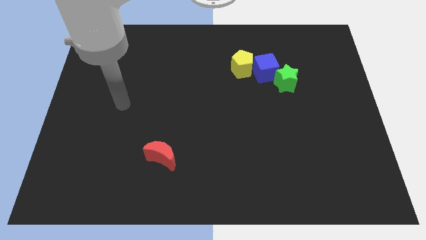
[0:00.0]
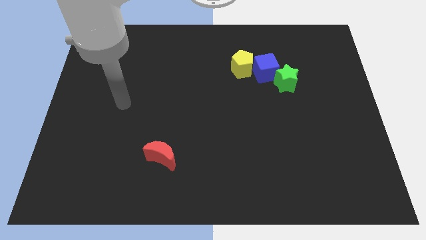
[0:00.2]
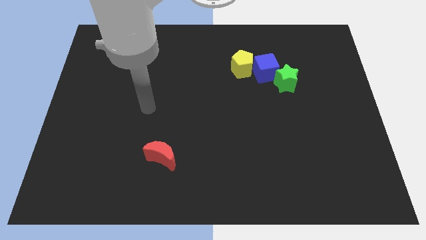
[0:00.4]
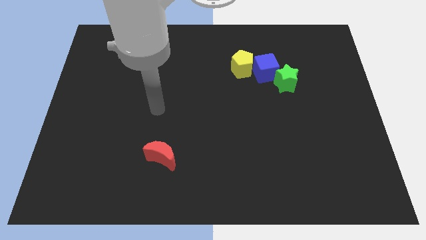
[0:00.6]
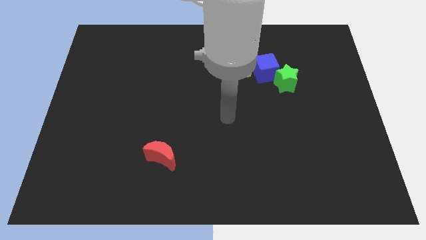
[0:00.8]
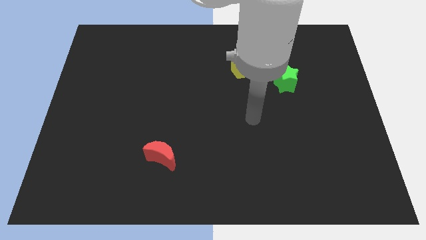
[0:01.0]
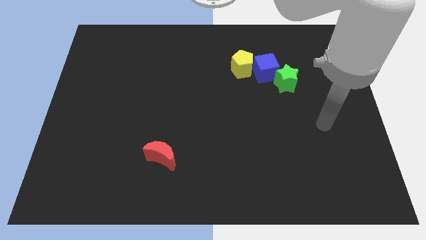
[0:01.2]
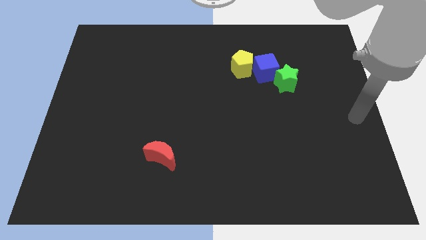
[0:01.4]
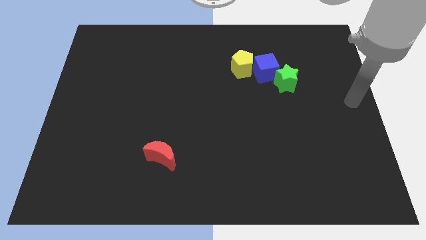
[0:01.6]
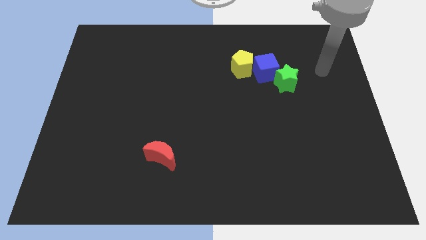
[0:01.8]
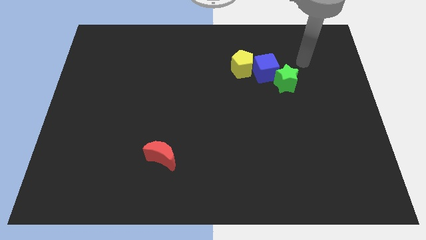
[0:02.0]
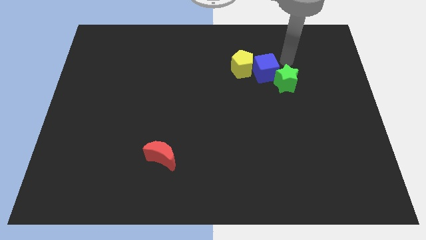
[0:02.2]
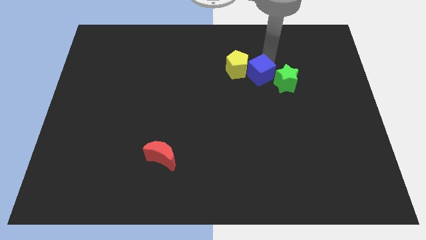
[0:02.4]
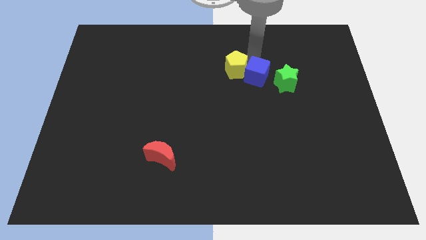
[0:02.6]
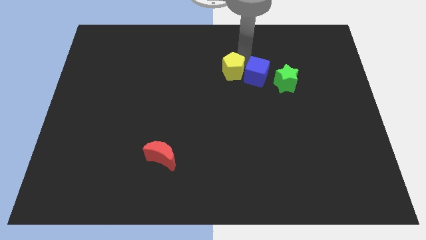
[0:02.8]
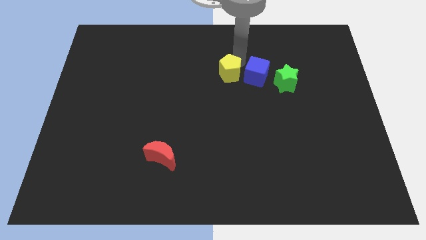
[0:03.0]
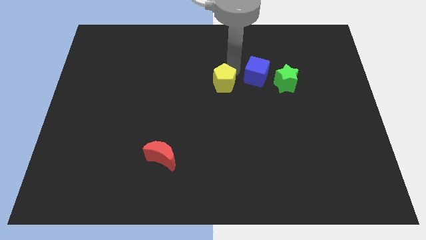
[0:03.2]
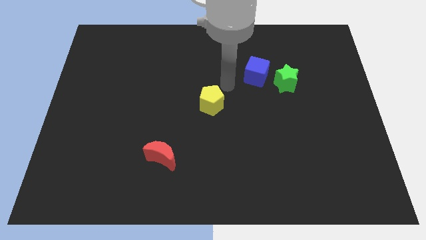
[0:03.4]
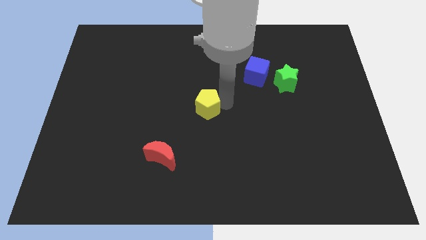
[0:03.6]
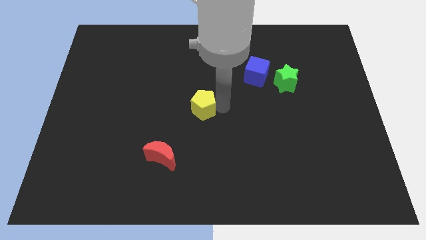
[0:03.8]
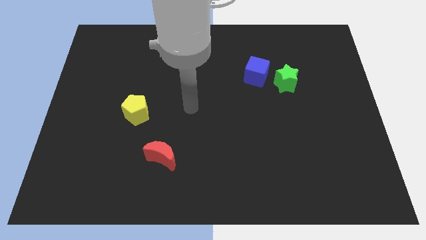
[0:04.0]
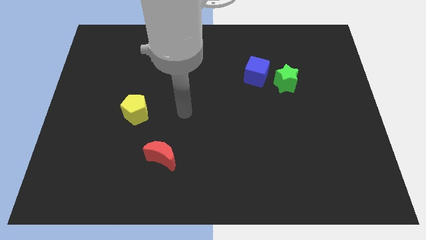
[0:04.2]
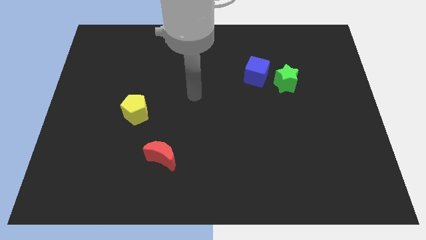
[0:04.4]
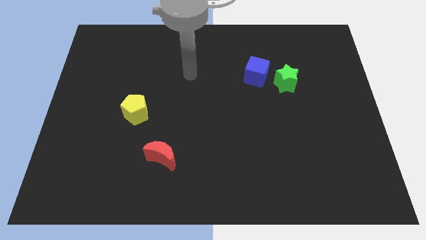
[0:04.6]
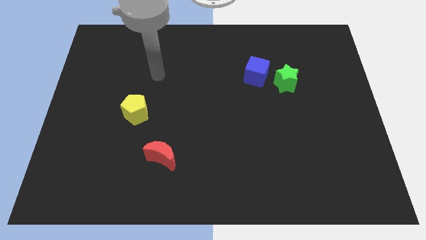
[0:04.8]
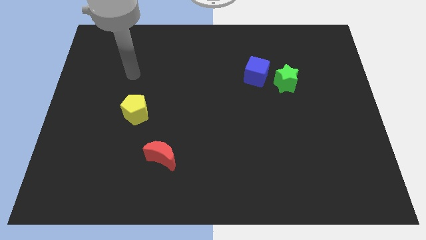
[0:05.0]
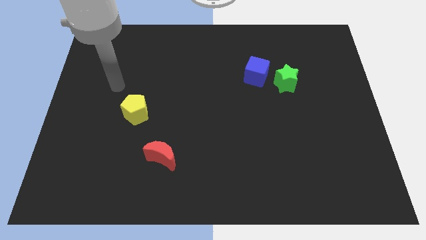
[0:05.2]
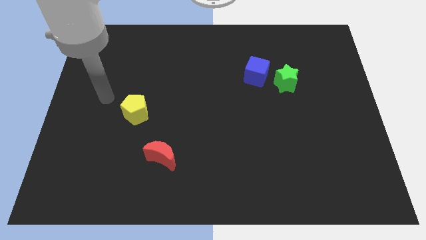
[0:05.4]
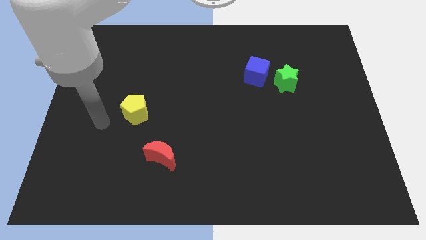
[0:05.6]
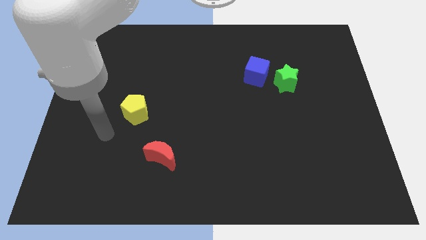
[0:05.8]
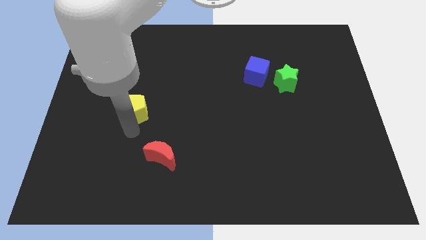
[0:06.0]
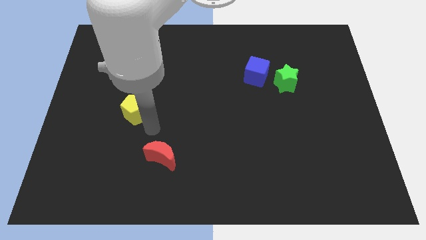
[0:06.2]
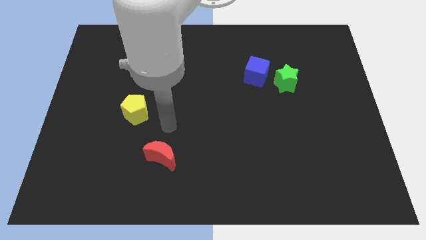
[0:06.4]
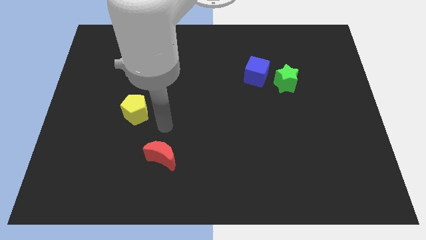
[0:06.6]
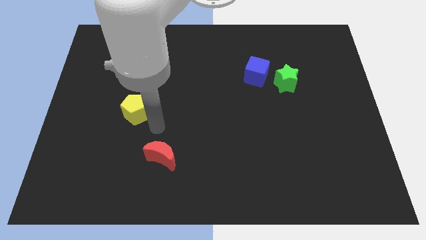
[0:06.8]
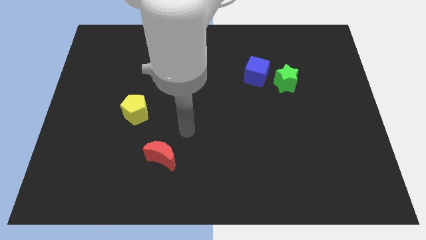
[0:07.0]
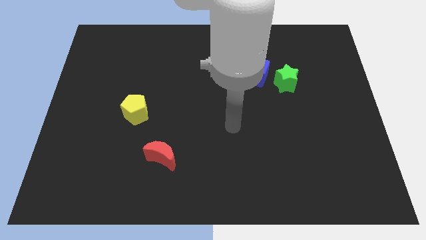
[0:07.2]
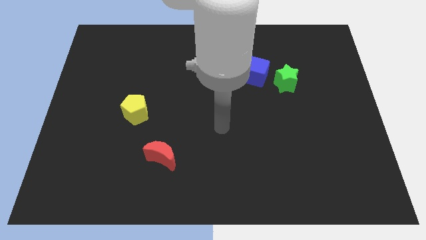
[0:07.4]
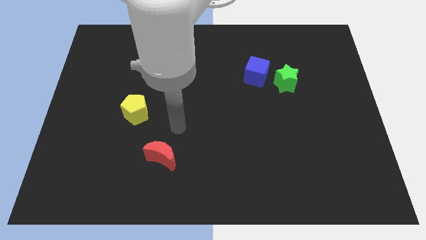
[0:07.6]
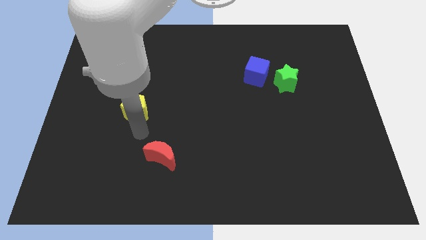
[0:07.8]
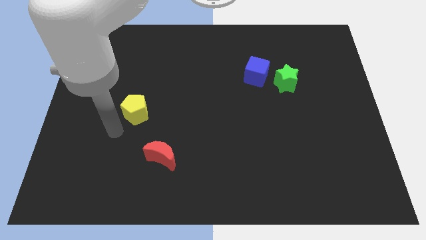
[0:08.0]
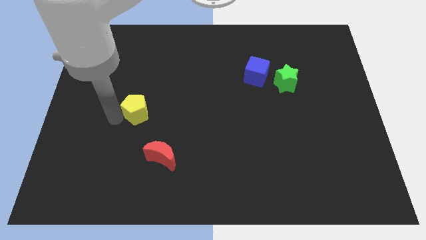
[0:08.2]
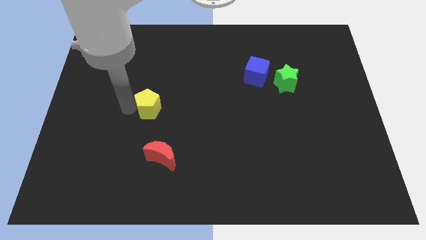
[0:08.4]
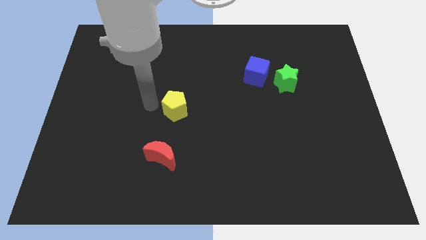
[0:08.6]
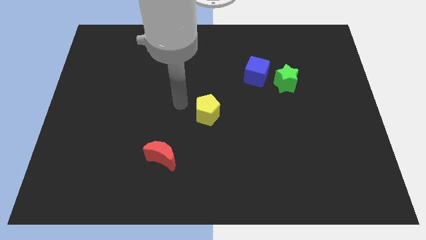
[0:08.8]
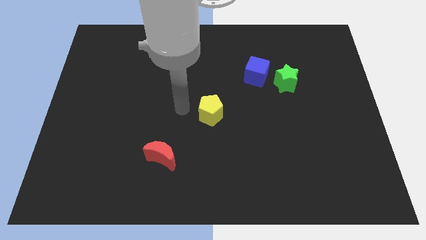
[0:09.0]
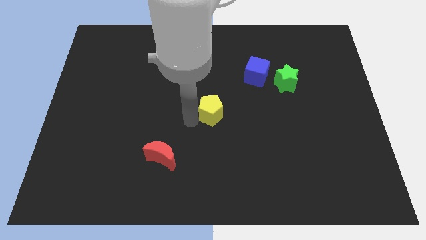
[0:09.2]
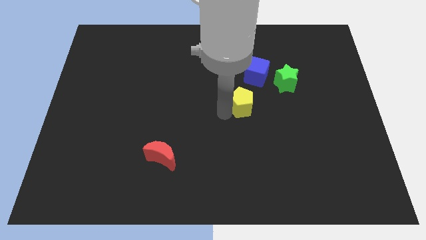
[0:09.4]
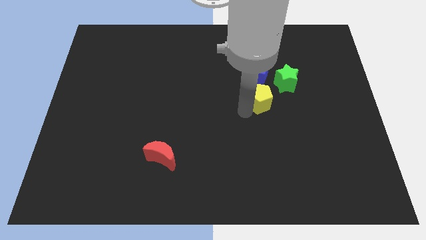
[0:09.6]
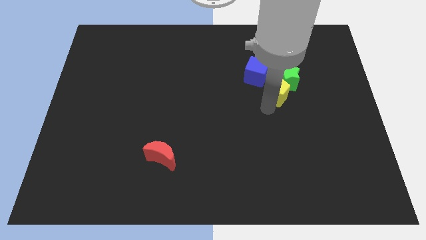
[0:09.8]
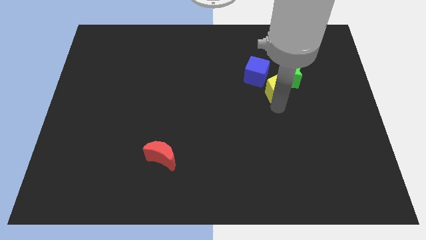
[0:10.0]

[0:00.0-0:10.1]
move the yellow block towards the green star

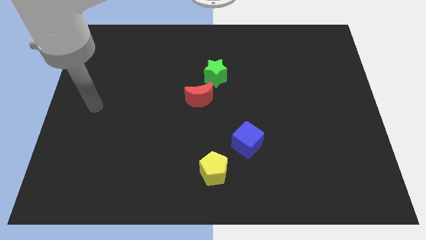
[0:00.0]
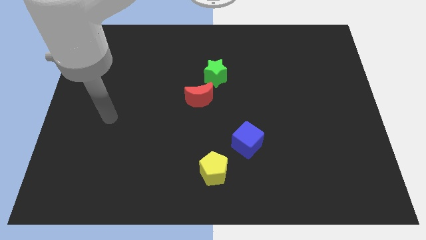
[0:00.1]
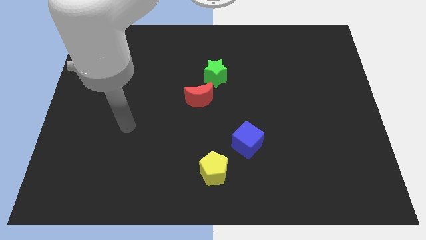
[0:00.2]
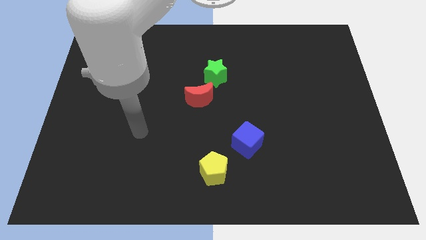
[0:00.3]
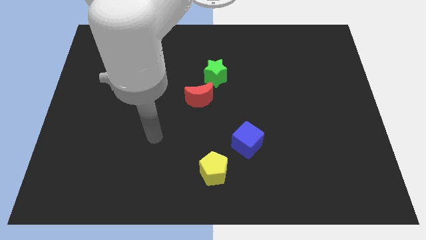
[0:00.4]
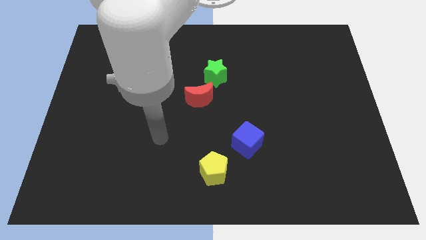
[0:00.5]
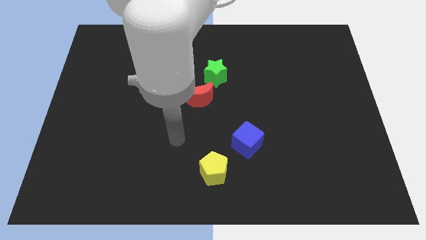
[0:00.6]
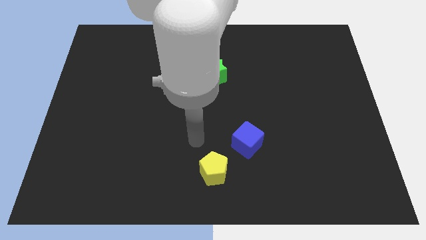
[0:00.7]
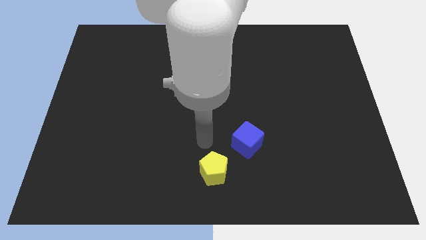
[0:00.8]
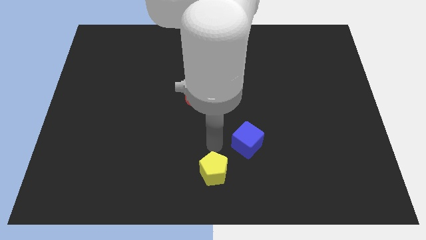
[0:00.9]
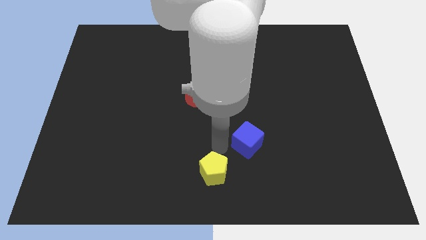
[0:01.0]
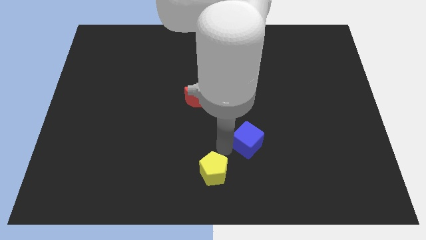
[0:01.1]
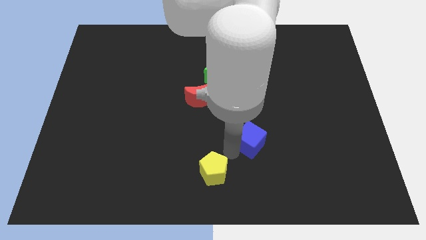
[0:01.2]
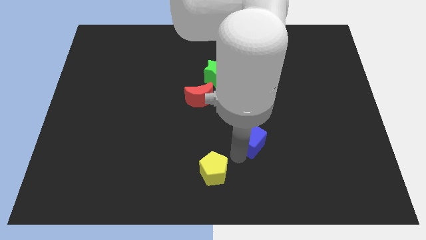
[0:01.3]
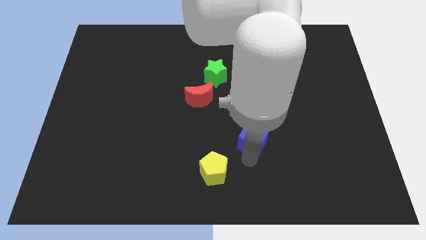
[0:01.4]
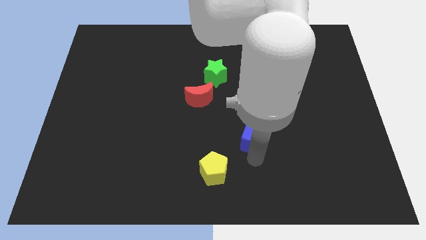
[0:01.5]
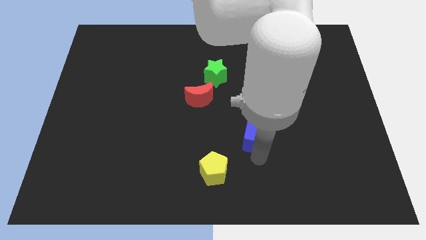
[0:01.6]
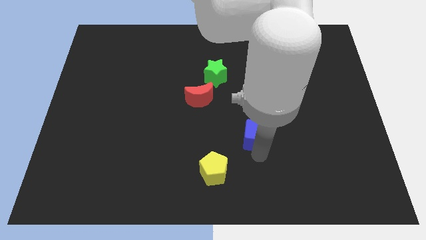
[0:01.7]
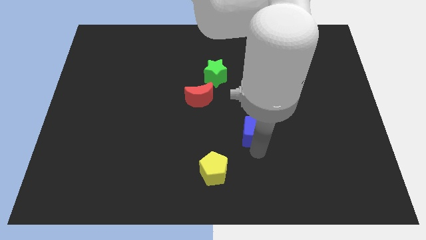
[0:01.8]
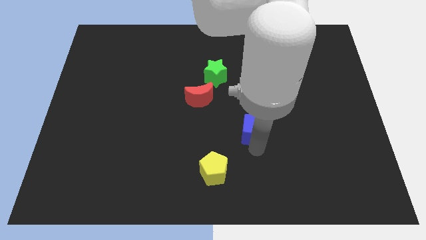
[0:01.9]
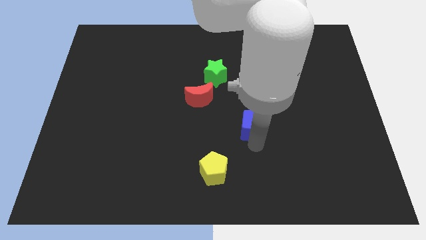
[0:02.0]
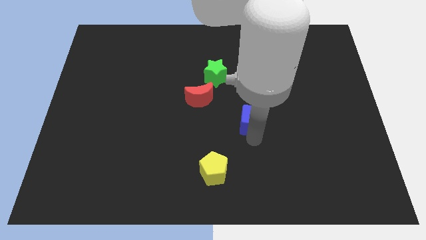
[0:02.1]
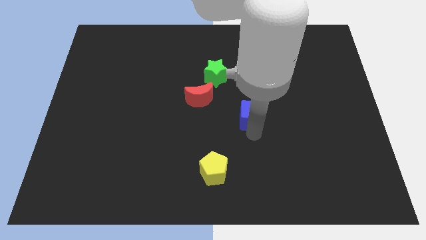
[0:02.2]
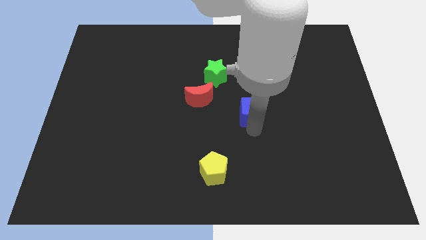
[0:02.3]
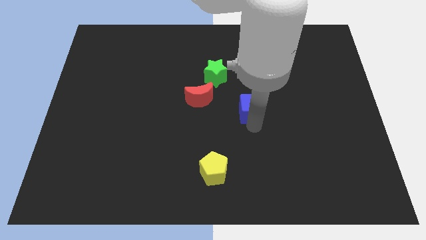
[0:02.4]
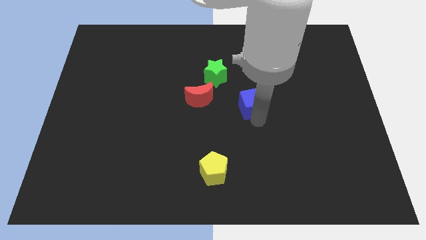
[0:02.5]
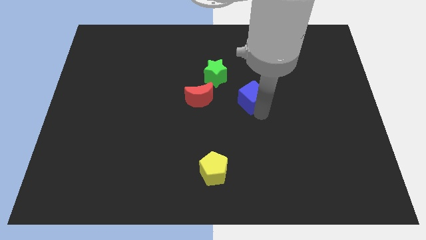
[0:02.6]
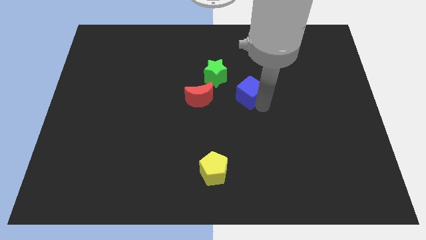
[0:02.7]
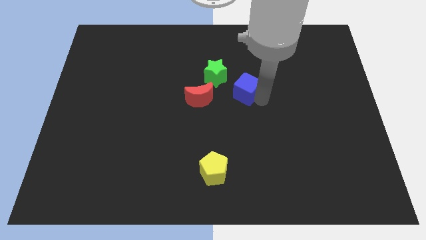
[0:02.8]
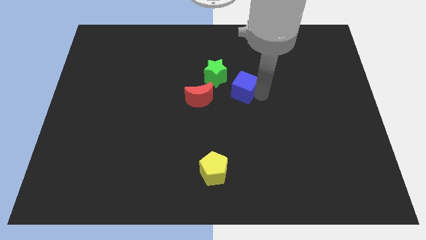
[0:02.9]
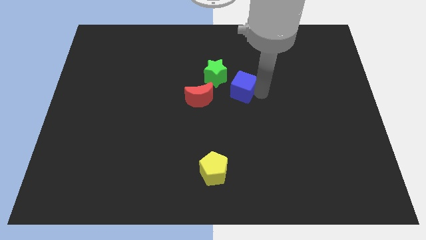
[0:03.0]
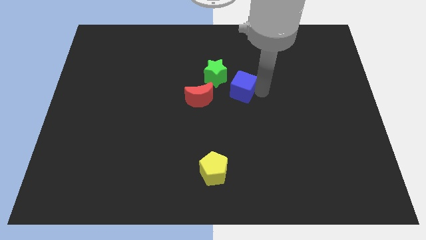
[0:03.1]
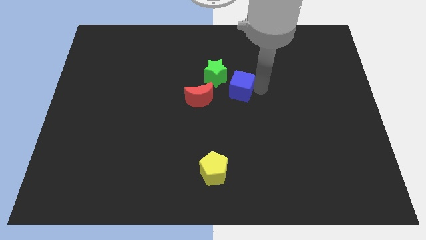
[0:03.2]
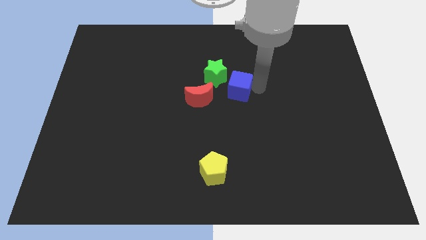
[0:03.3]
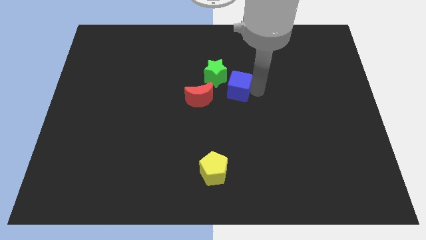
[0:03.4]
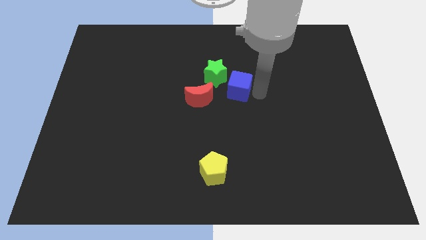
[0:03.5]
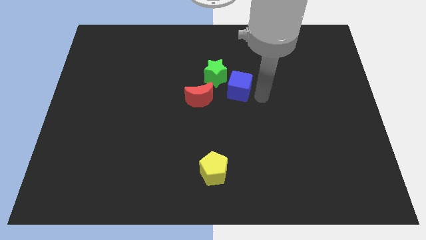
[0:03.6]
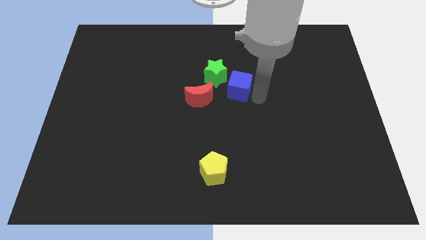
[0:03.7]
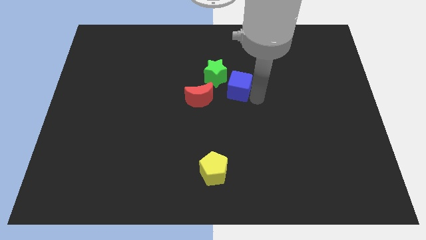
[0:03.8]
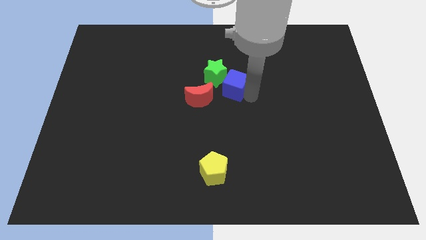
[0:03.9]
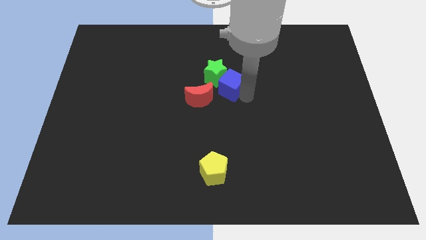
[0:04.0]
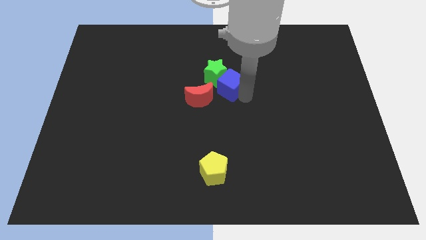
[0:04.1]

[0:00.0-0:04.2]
push the blue cube close to the green star
